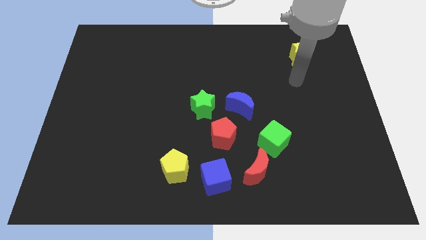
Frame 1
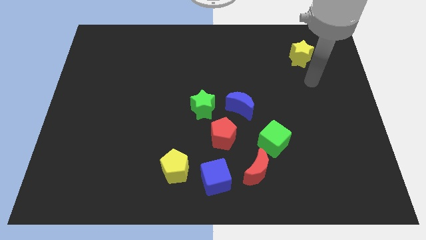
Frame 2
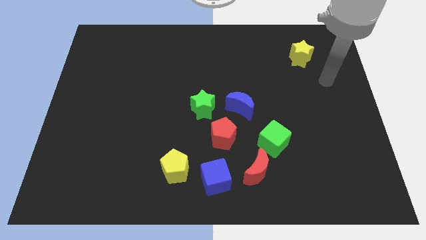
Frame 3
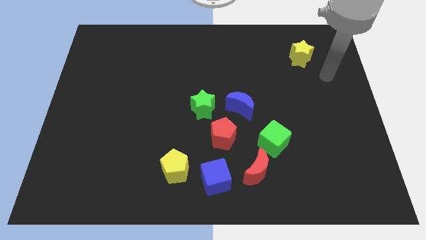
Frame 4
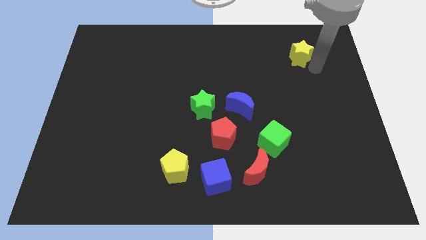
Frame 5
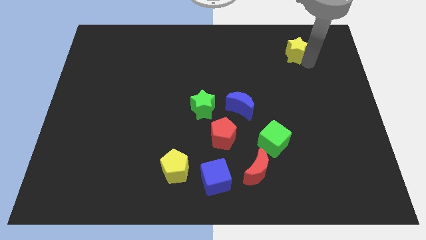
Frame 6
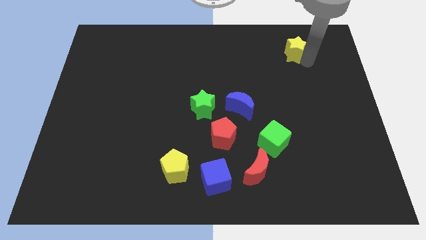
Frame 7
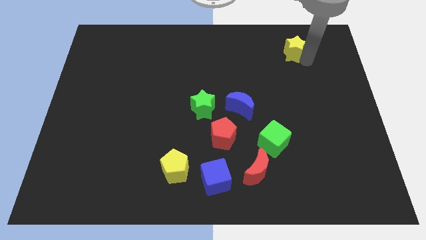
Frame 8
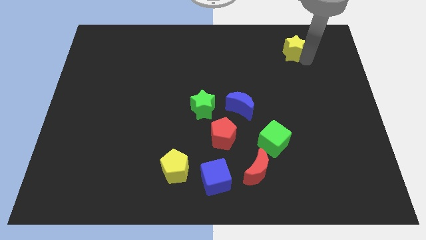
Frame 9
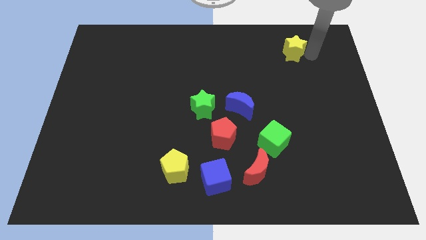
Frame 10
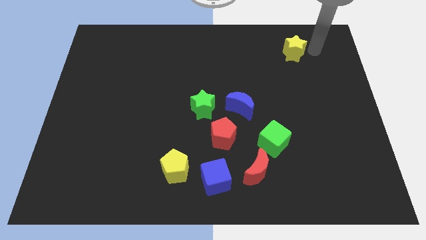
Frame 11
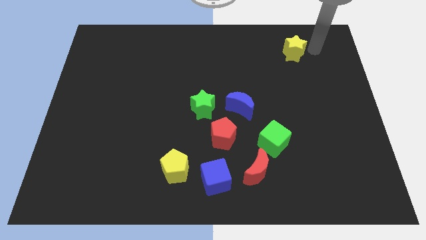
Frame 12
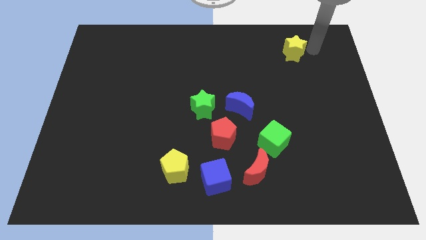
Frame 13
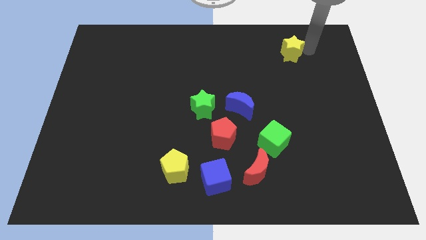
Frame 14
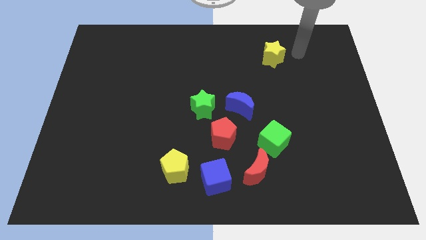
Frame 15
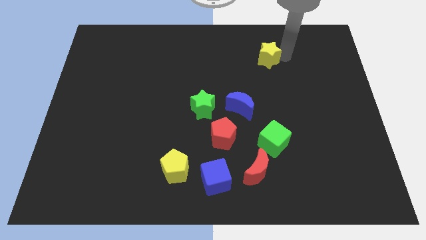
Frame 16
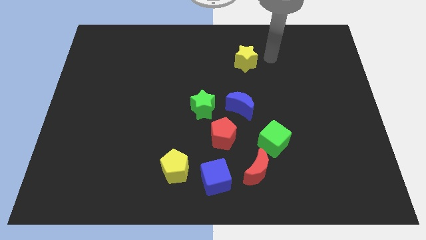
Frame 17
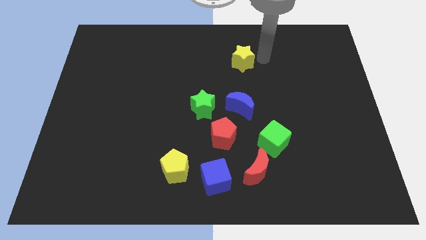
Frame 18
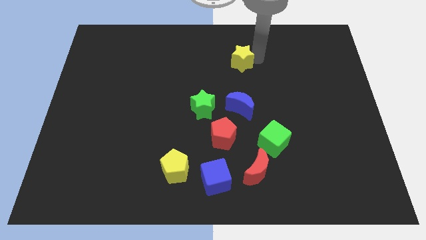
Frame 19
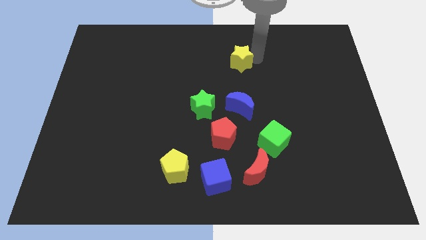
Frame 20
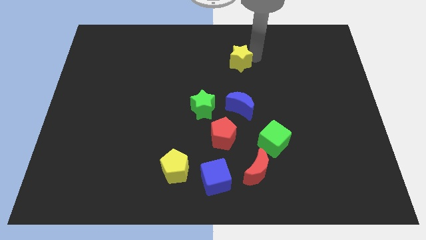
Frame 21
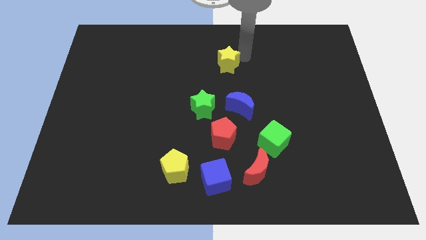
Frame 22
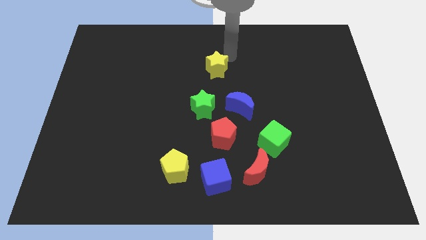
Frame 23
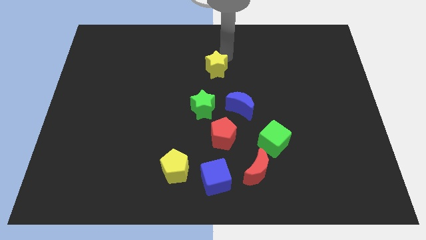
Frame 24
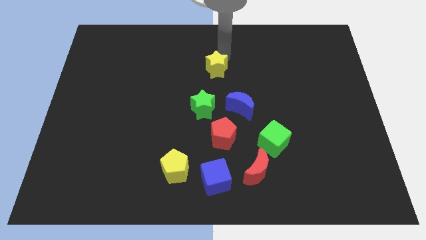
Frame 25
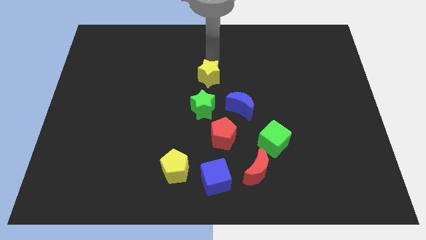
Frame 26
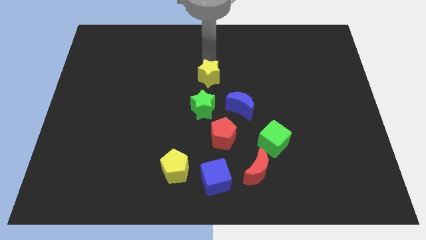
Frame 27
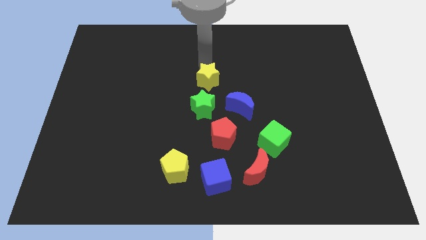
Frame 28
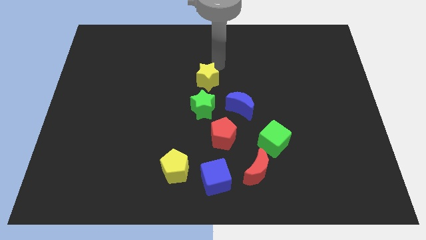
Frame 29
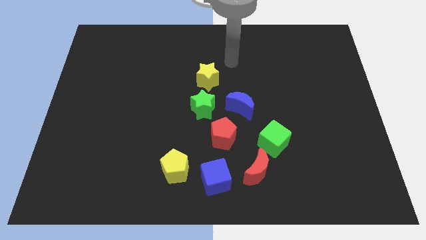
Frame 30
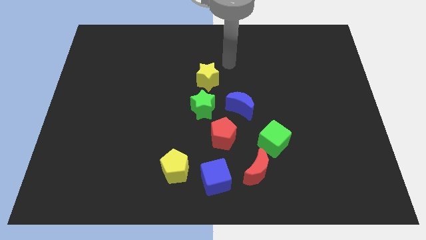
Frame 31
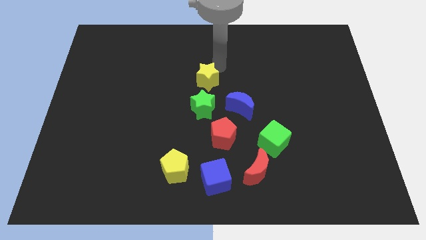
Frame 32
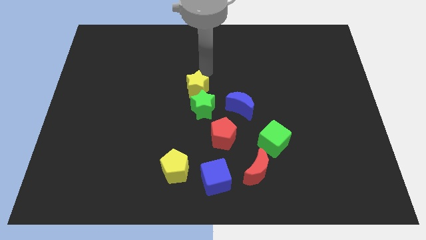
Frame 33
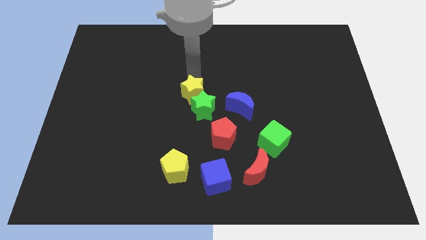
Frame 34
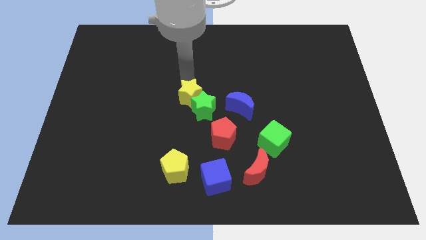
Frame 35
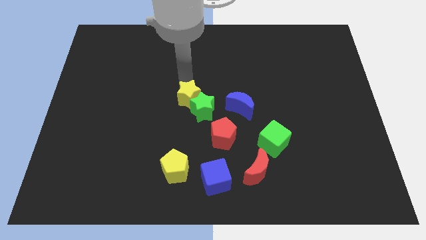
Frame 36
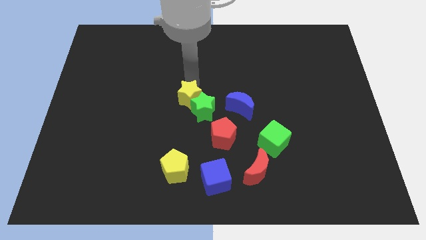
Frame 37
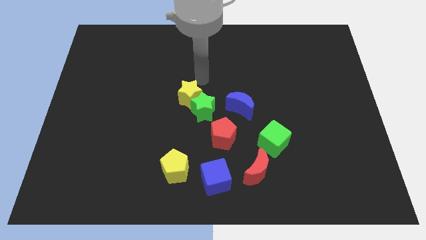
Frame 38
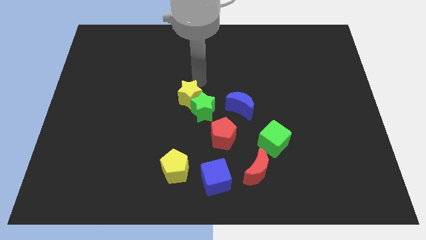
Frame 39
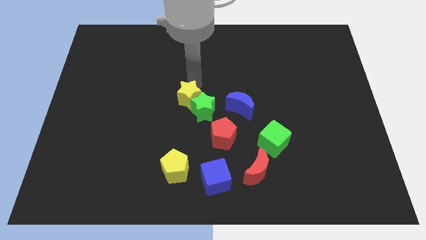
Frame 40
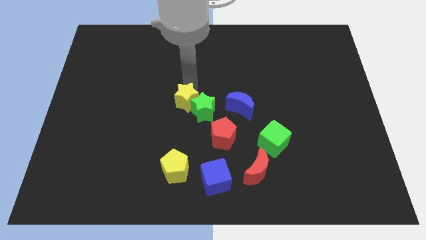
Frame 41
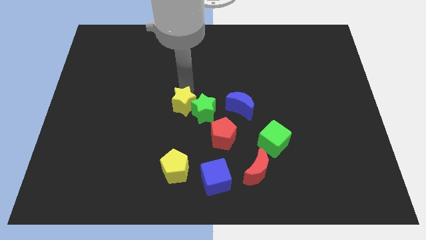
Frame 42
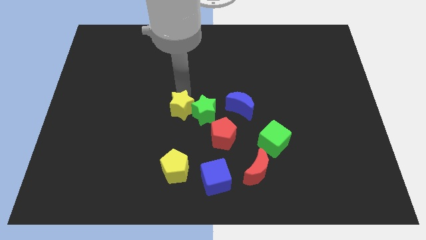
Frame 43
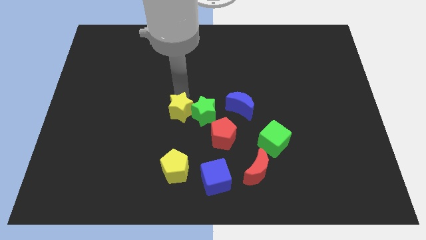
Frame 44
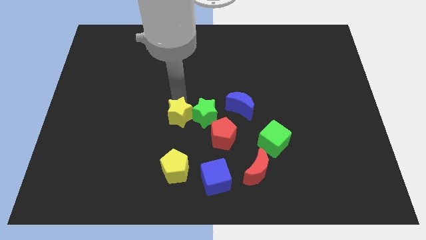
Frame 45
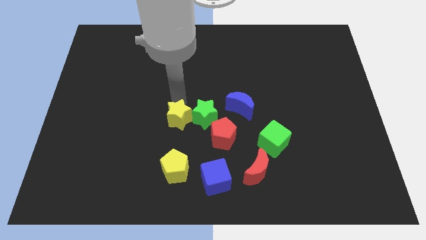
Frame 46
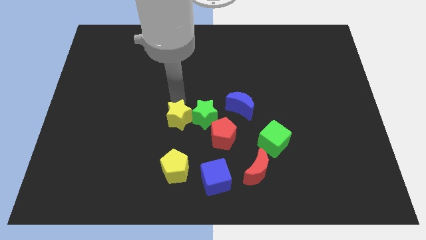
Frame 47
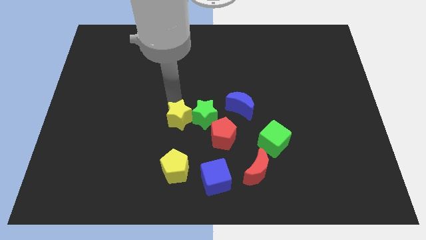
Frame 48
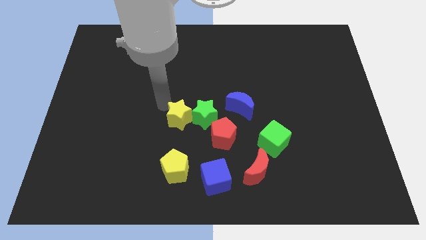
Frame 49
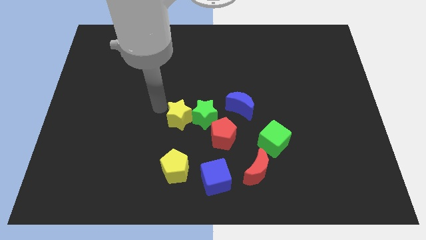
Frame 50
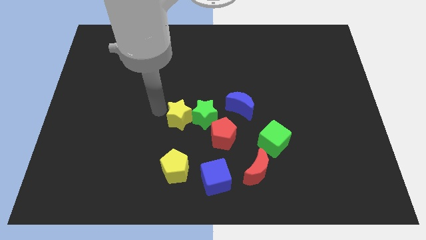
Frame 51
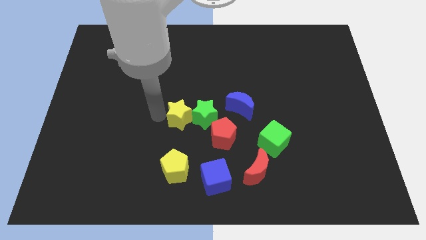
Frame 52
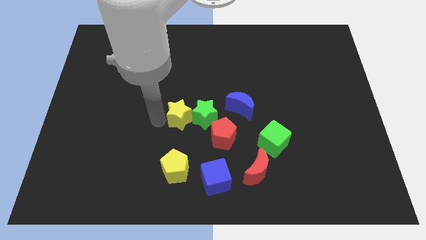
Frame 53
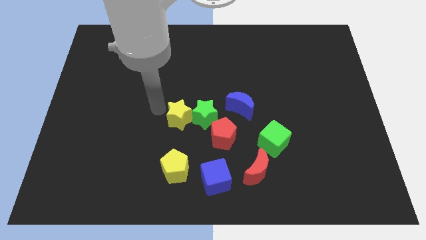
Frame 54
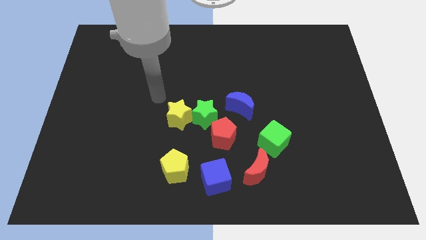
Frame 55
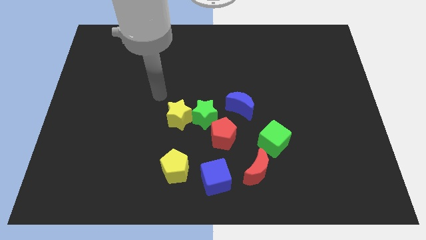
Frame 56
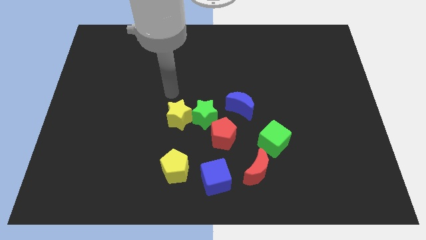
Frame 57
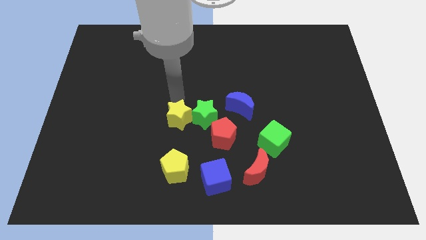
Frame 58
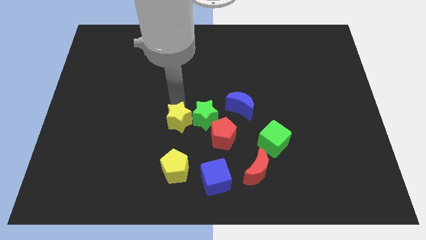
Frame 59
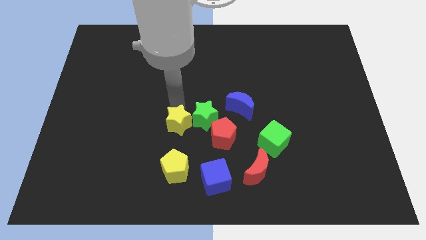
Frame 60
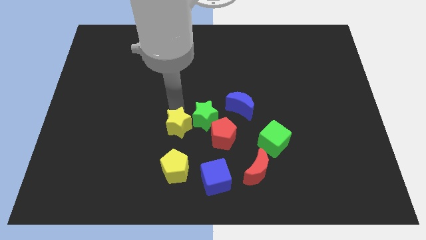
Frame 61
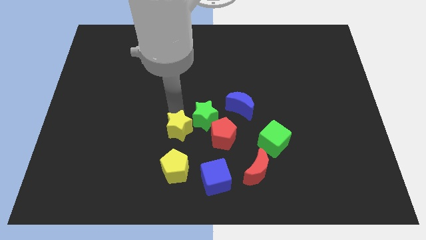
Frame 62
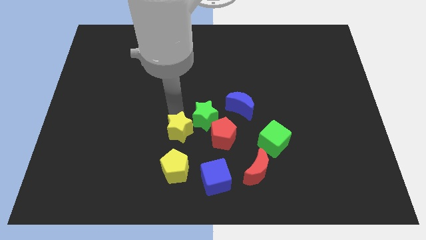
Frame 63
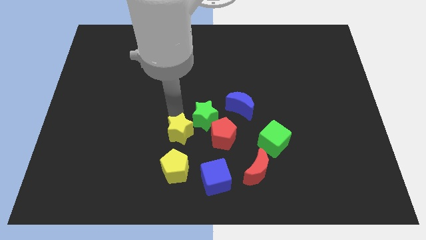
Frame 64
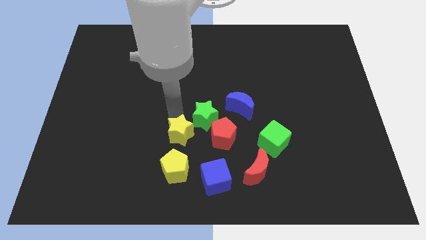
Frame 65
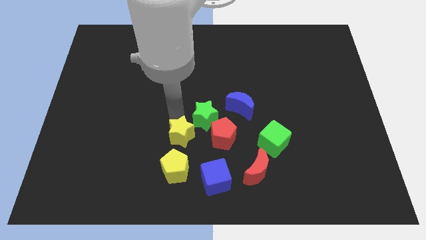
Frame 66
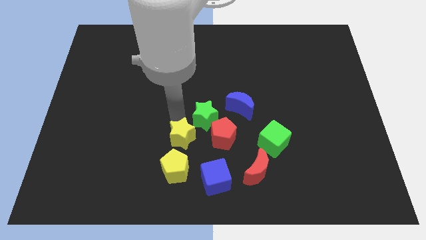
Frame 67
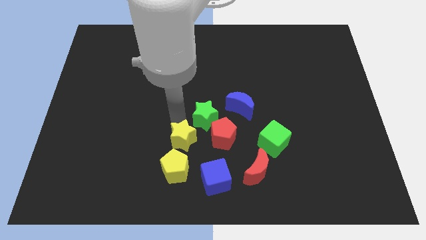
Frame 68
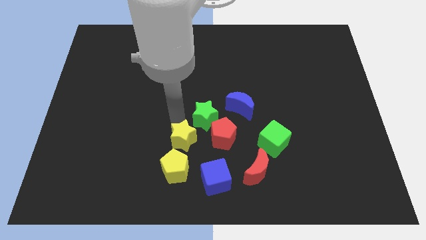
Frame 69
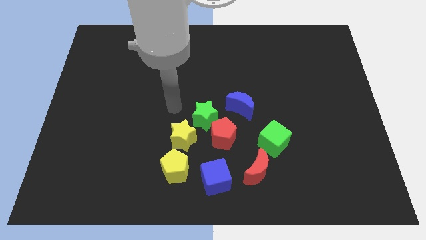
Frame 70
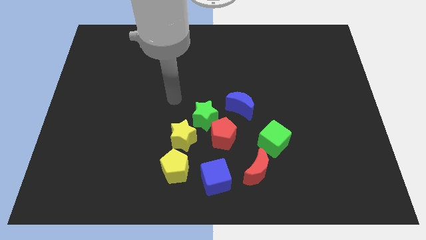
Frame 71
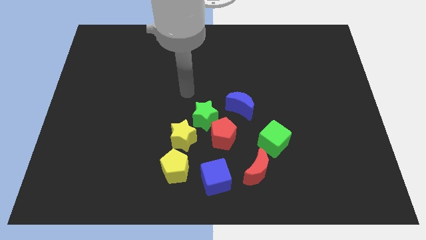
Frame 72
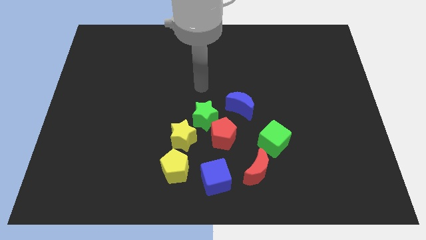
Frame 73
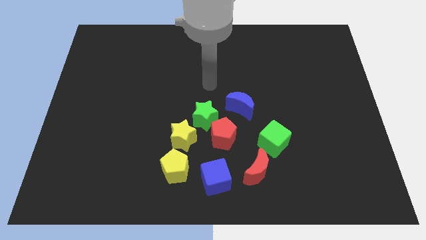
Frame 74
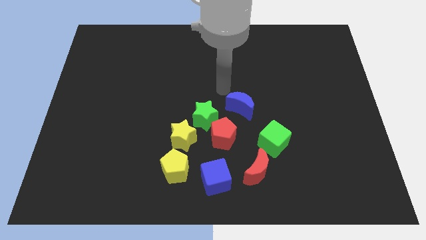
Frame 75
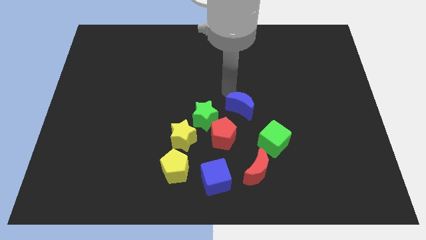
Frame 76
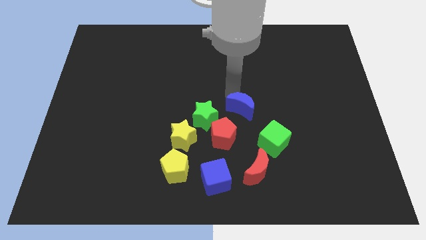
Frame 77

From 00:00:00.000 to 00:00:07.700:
move the yellow star to the left side of the red pentagon

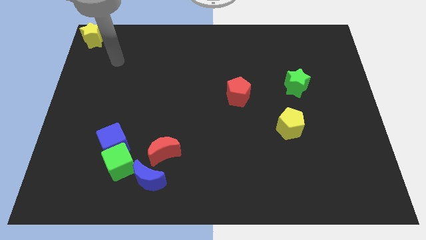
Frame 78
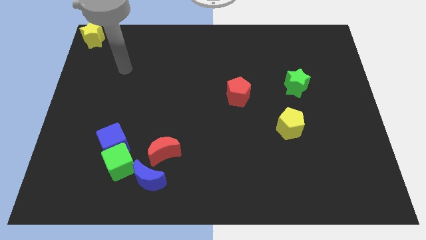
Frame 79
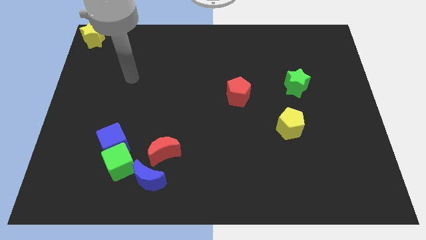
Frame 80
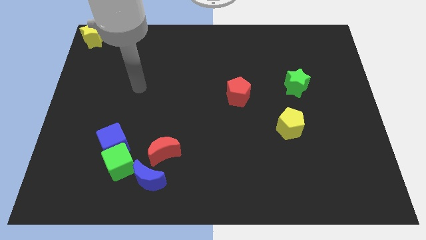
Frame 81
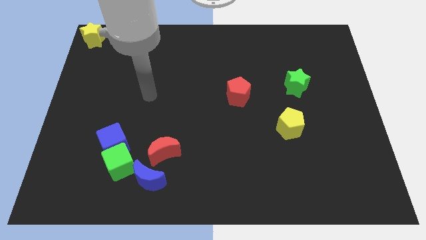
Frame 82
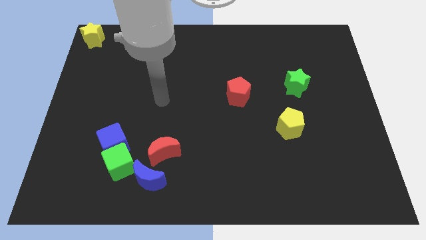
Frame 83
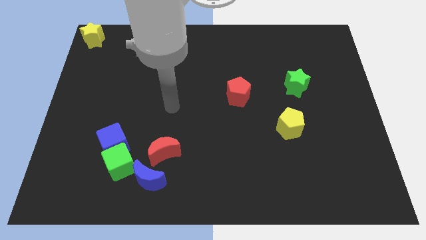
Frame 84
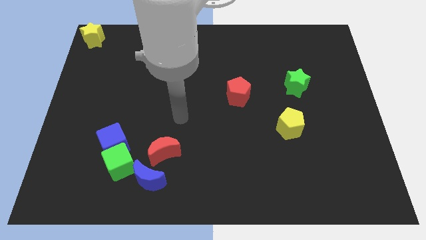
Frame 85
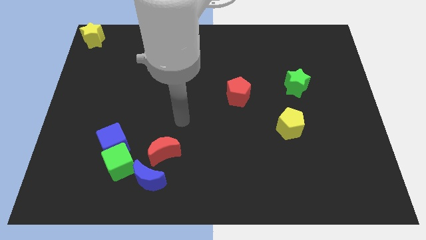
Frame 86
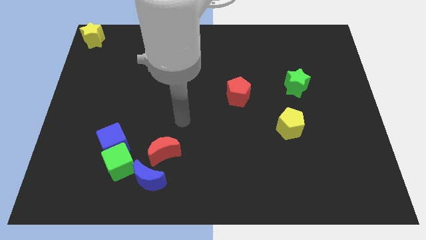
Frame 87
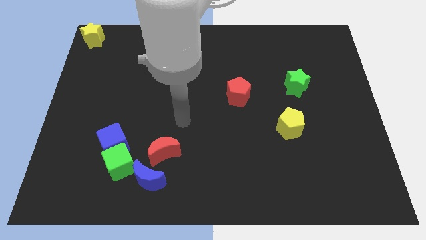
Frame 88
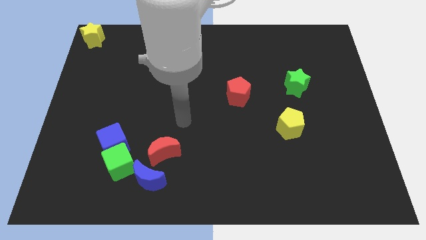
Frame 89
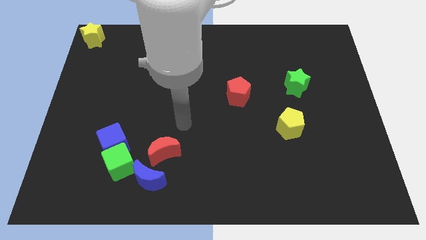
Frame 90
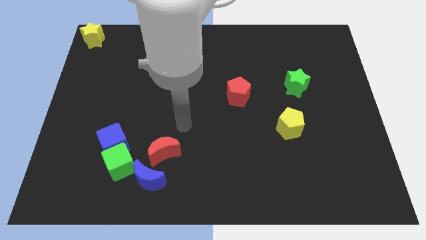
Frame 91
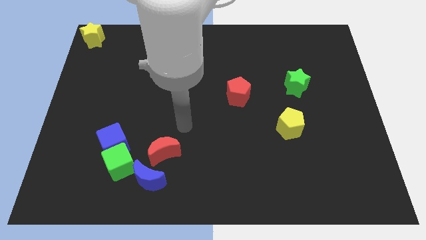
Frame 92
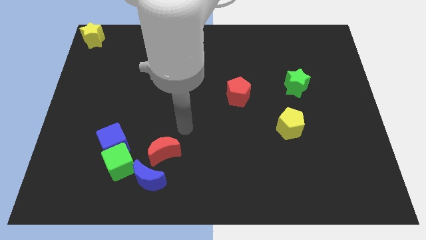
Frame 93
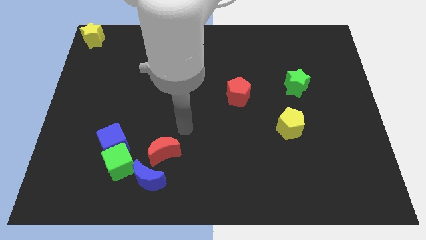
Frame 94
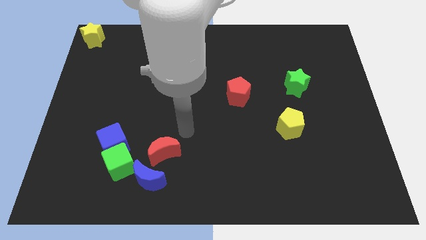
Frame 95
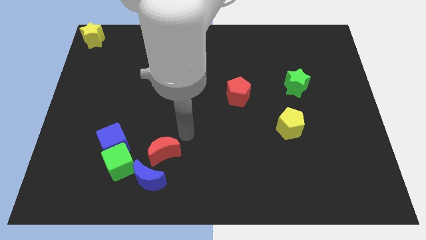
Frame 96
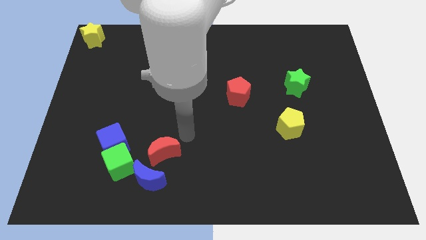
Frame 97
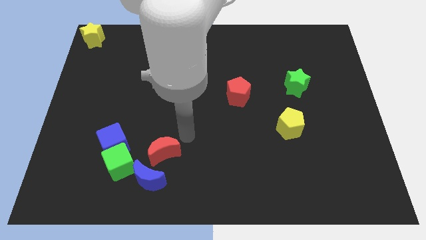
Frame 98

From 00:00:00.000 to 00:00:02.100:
place your hand close to red crescent
